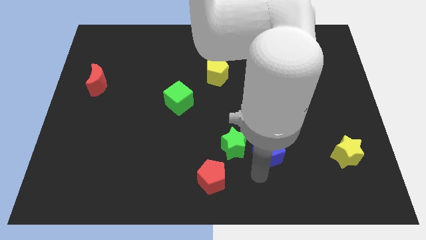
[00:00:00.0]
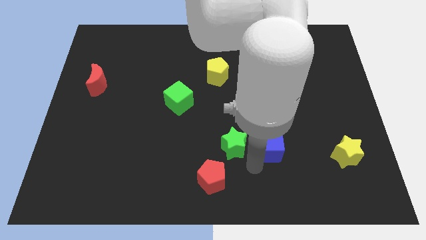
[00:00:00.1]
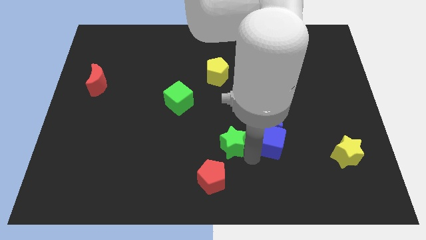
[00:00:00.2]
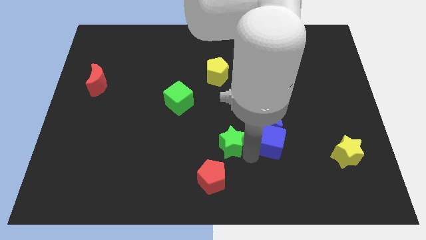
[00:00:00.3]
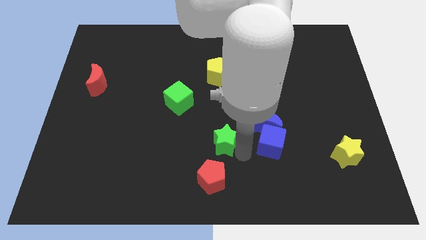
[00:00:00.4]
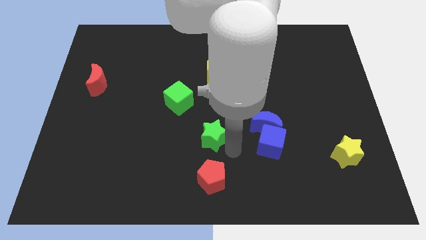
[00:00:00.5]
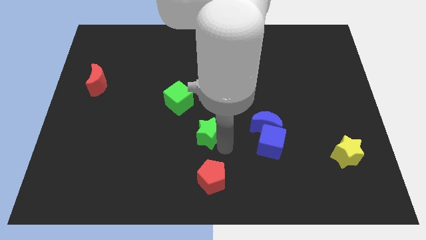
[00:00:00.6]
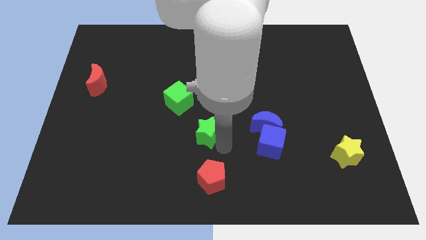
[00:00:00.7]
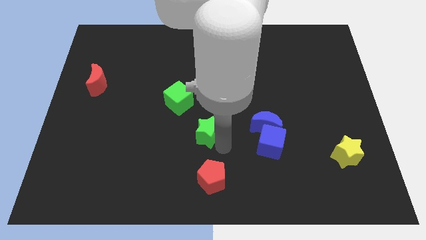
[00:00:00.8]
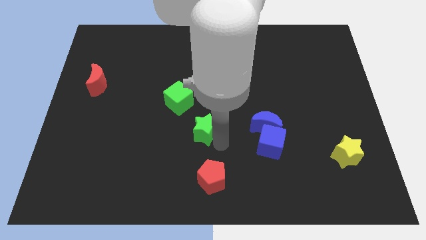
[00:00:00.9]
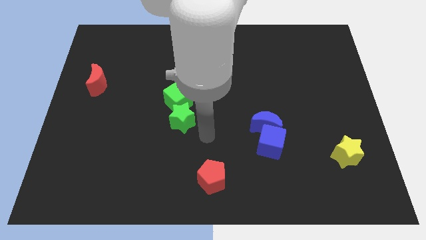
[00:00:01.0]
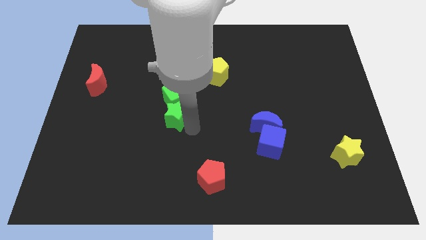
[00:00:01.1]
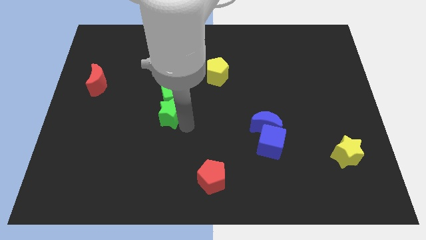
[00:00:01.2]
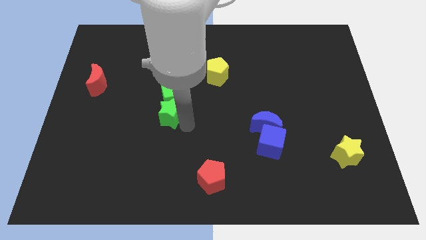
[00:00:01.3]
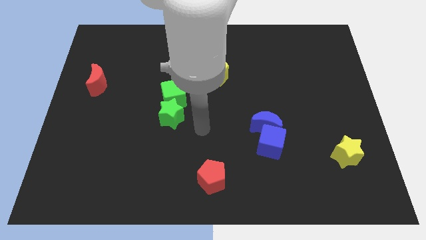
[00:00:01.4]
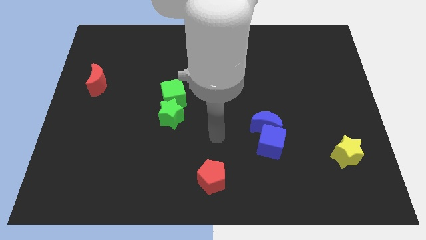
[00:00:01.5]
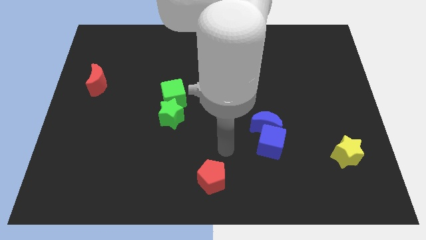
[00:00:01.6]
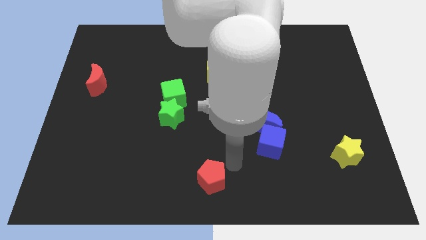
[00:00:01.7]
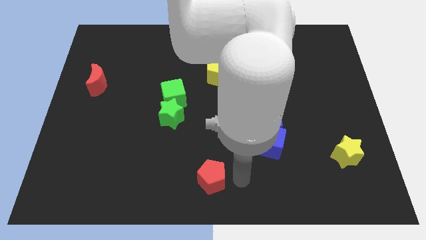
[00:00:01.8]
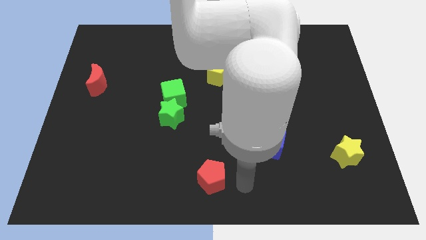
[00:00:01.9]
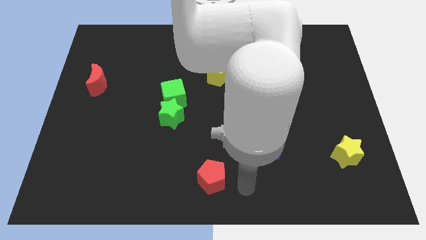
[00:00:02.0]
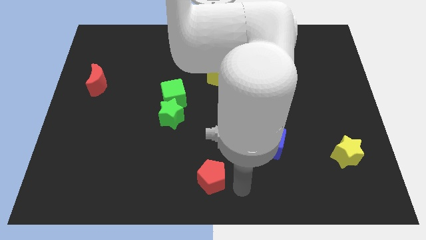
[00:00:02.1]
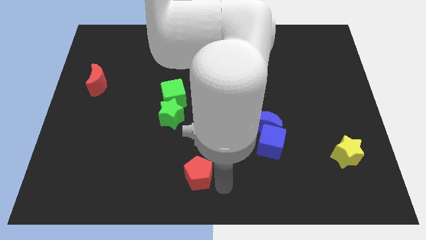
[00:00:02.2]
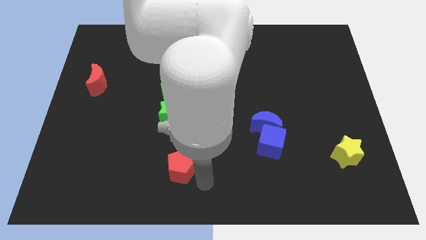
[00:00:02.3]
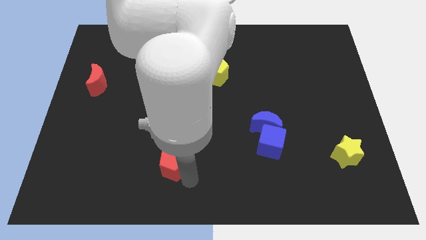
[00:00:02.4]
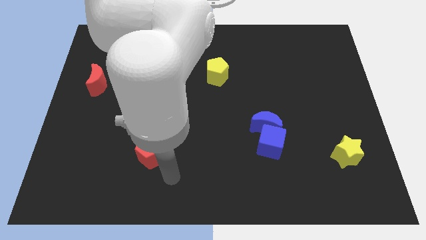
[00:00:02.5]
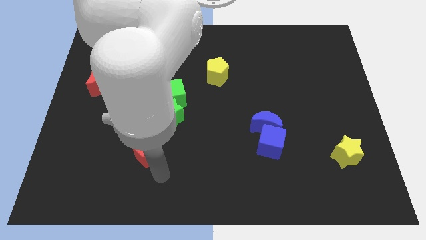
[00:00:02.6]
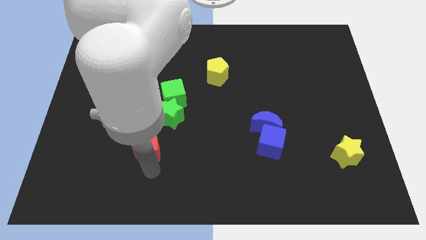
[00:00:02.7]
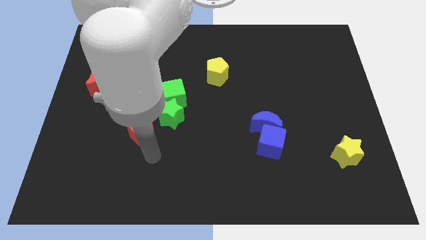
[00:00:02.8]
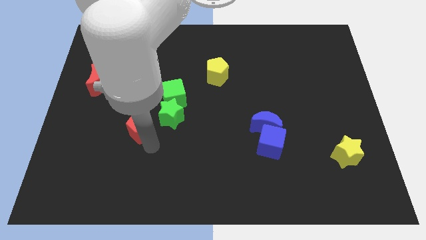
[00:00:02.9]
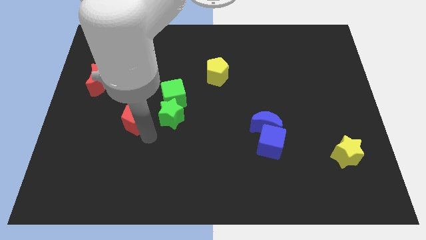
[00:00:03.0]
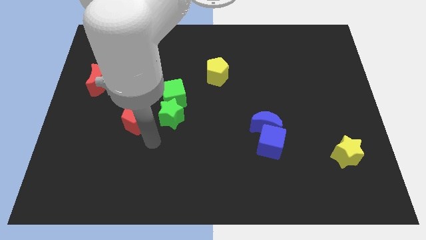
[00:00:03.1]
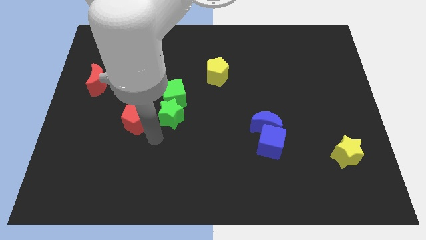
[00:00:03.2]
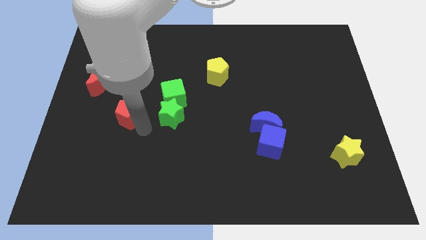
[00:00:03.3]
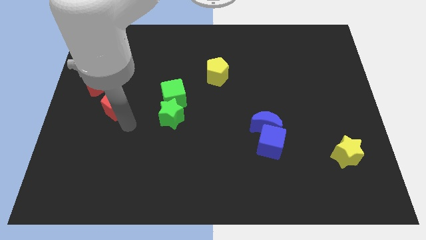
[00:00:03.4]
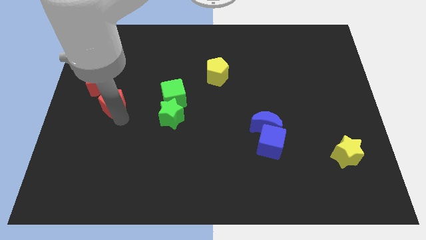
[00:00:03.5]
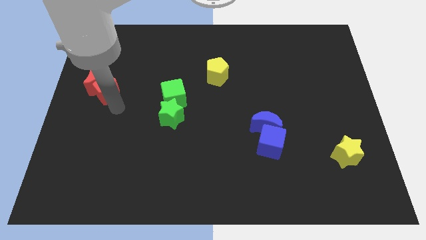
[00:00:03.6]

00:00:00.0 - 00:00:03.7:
move the green star into the green cube

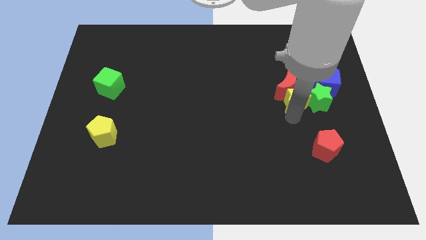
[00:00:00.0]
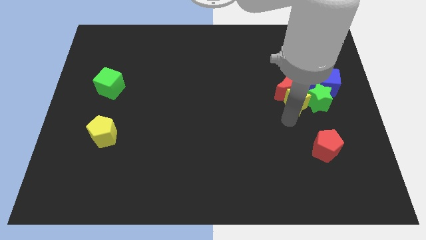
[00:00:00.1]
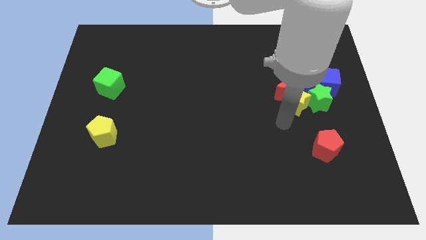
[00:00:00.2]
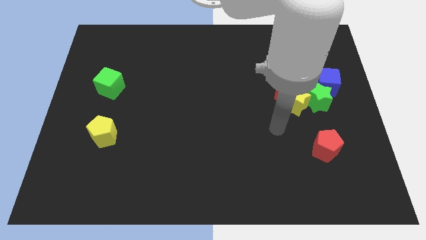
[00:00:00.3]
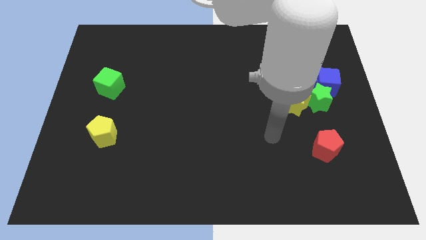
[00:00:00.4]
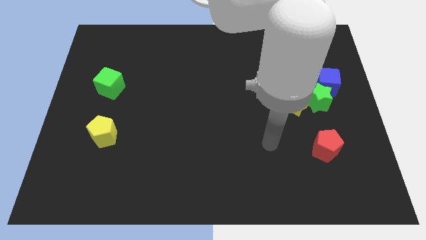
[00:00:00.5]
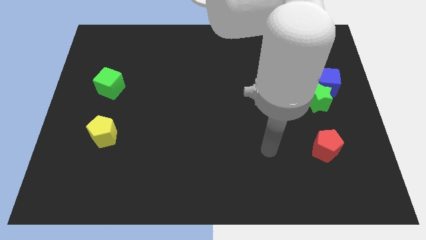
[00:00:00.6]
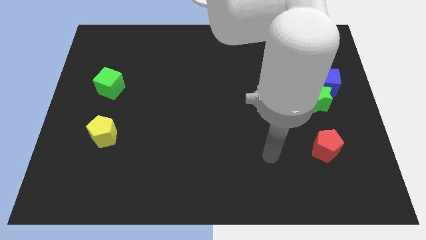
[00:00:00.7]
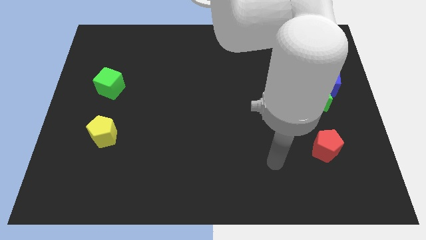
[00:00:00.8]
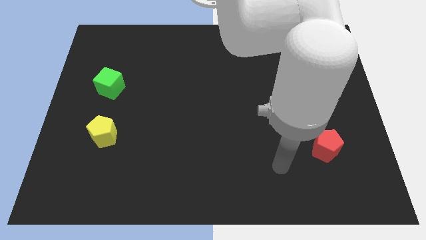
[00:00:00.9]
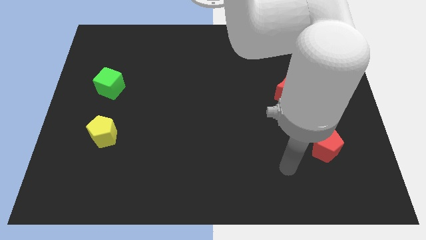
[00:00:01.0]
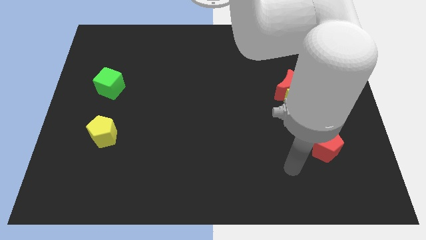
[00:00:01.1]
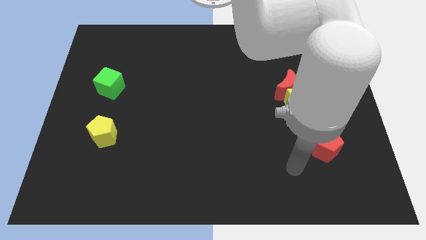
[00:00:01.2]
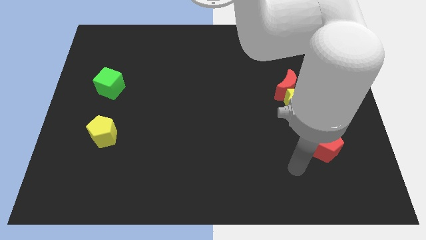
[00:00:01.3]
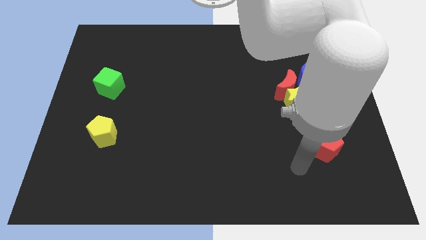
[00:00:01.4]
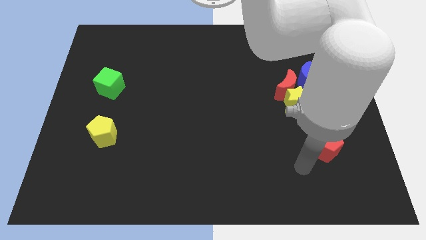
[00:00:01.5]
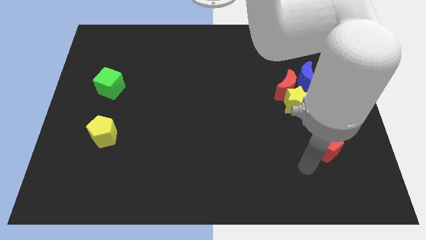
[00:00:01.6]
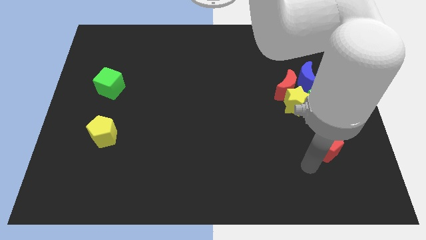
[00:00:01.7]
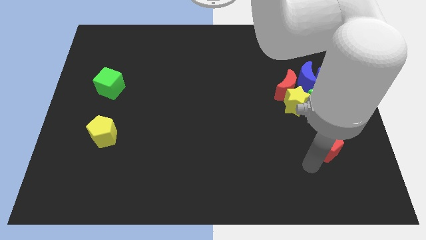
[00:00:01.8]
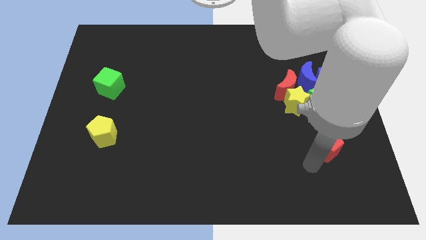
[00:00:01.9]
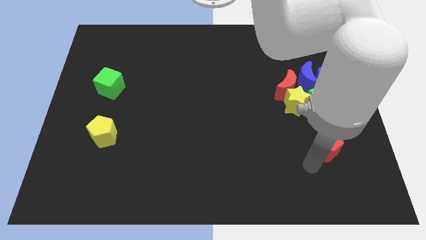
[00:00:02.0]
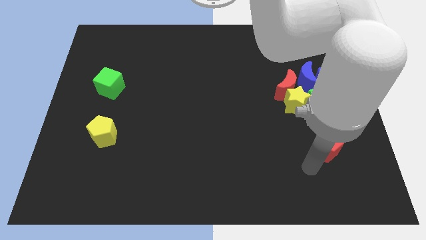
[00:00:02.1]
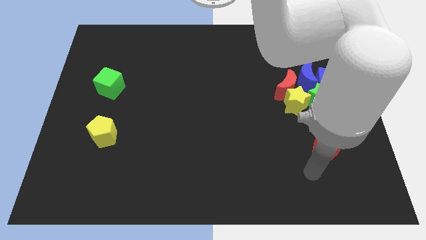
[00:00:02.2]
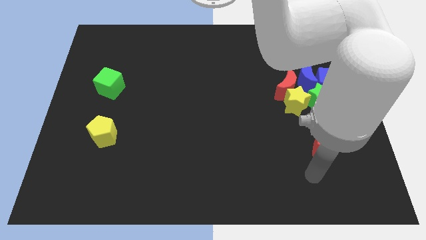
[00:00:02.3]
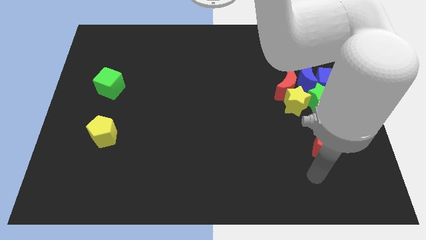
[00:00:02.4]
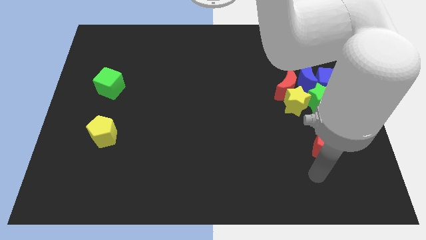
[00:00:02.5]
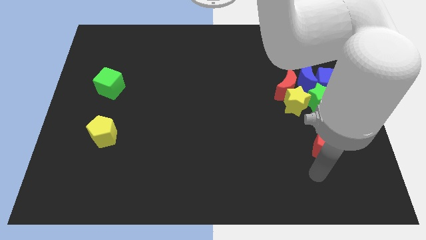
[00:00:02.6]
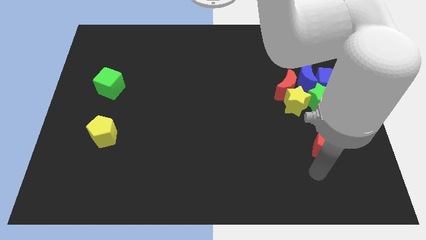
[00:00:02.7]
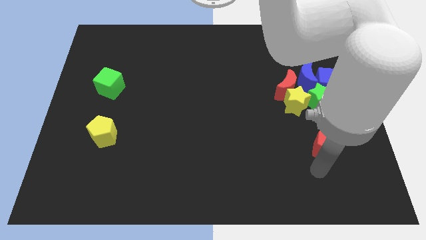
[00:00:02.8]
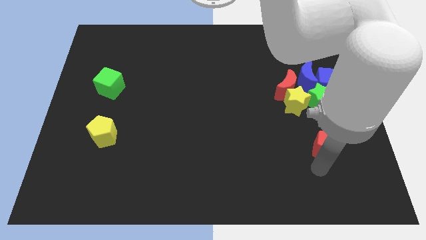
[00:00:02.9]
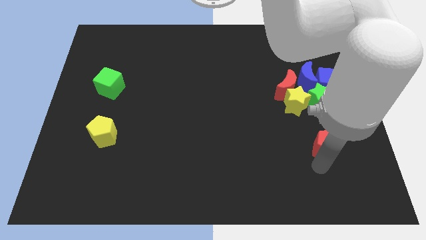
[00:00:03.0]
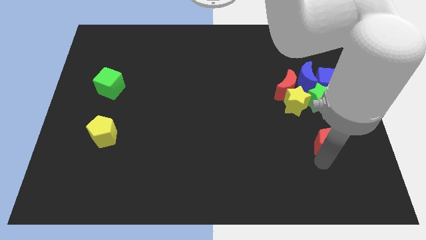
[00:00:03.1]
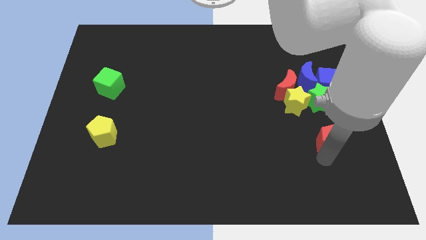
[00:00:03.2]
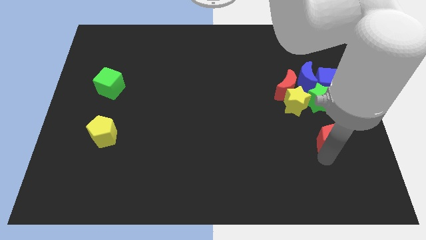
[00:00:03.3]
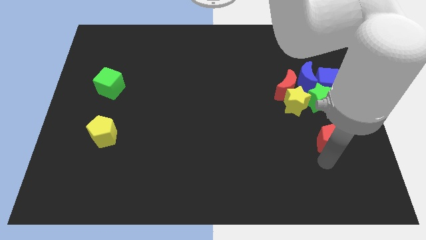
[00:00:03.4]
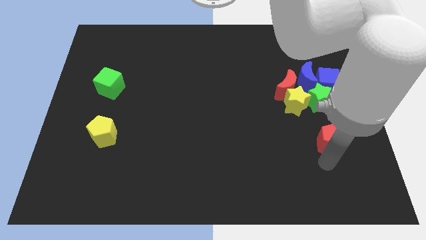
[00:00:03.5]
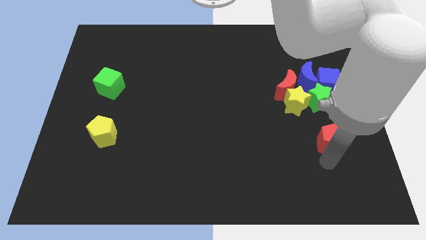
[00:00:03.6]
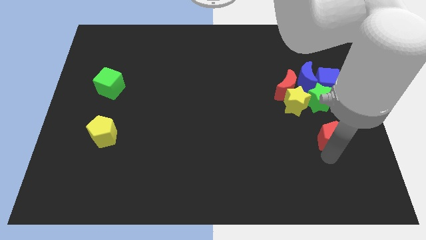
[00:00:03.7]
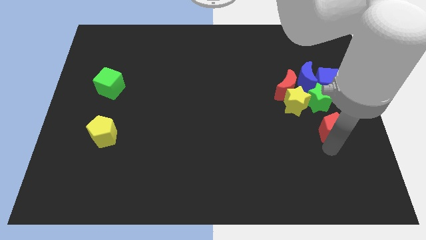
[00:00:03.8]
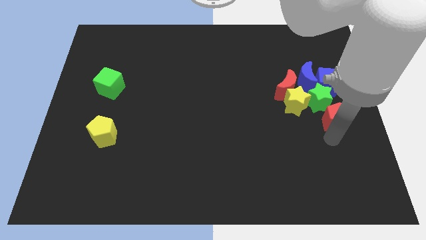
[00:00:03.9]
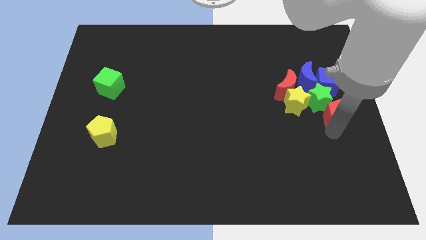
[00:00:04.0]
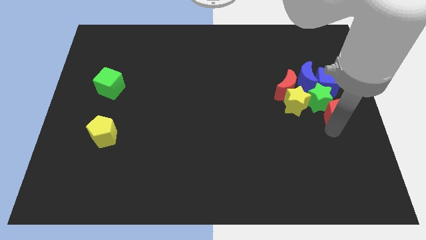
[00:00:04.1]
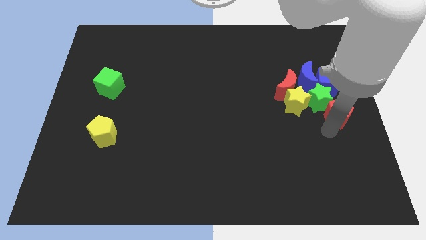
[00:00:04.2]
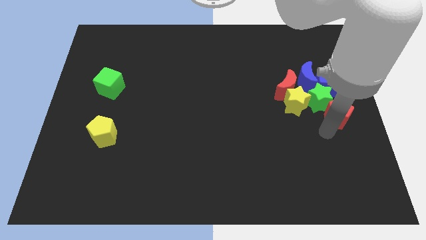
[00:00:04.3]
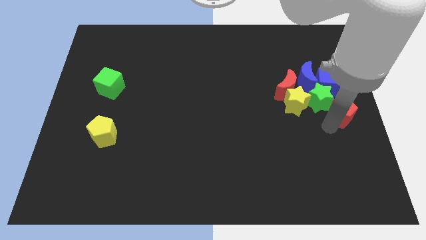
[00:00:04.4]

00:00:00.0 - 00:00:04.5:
move away from the yellow star

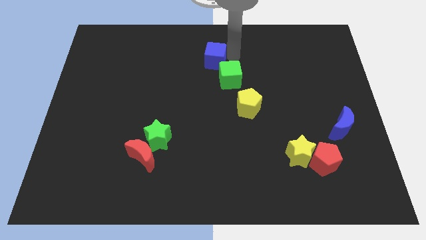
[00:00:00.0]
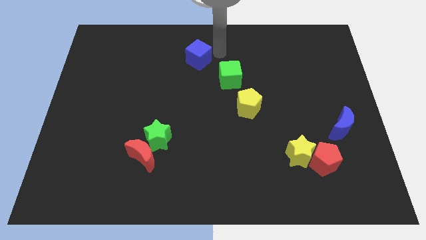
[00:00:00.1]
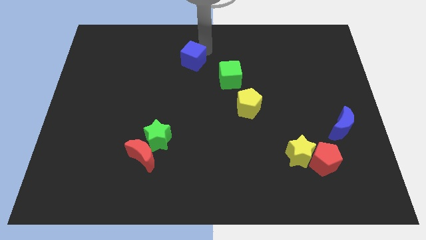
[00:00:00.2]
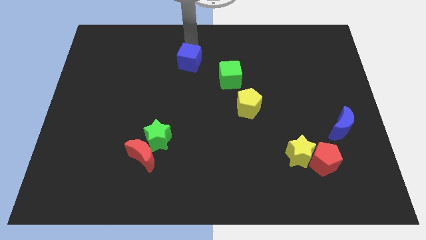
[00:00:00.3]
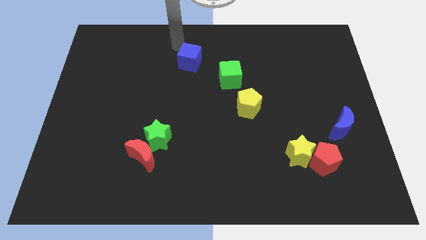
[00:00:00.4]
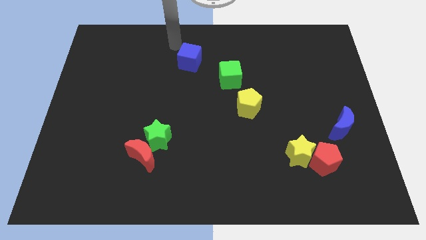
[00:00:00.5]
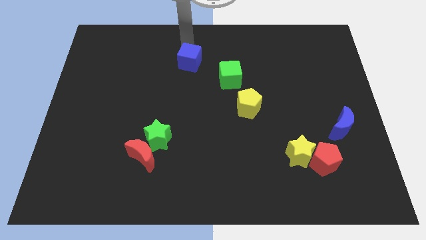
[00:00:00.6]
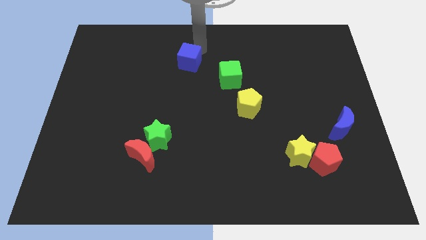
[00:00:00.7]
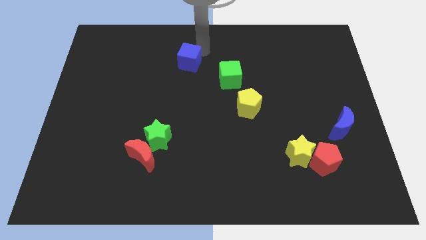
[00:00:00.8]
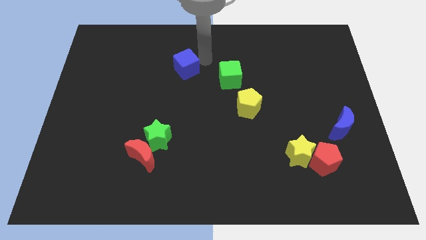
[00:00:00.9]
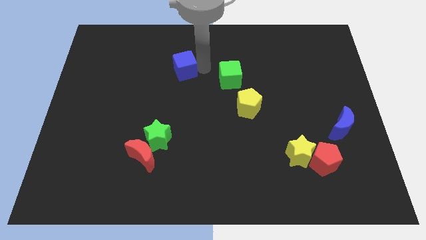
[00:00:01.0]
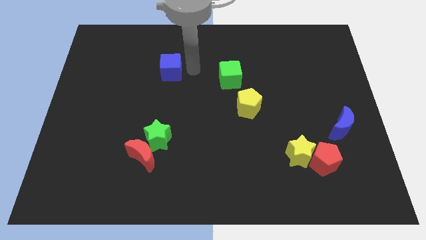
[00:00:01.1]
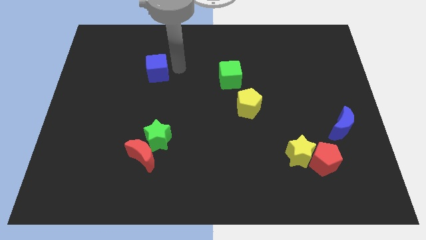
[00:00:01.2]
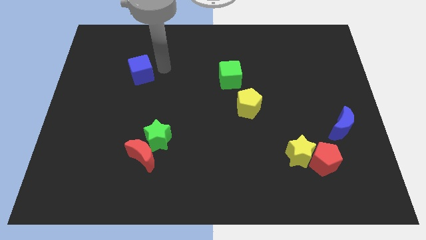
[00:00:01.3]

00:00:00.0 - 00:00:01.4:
place the blue cube above the green star
